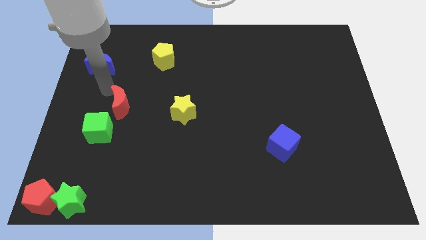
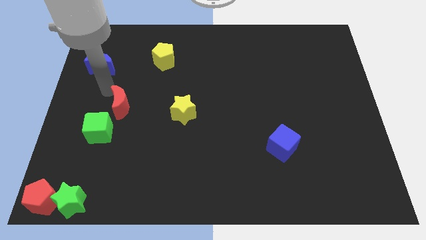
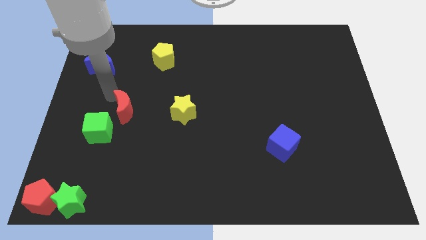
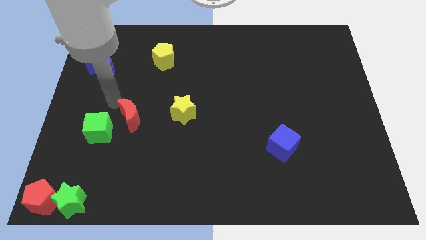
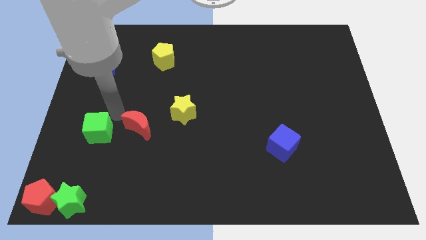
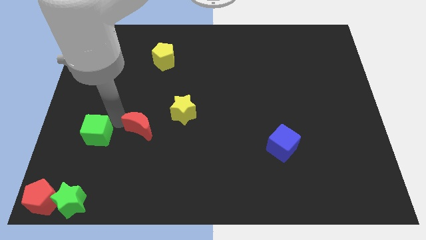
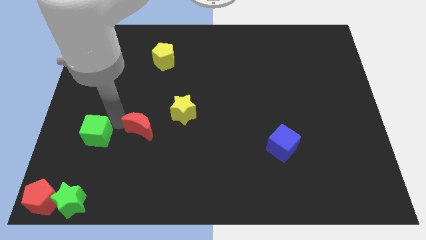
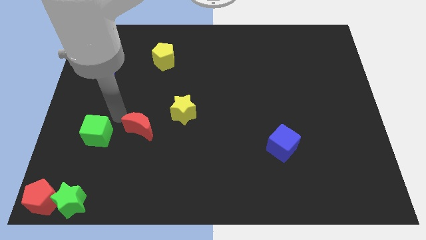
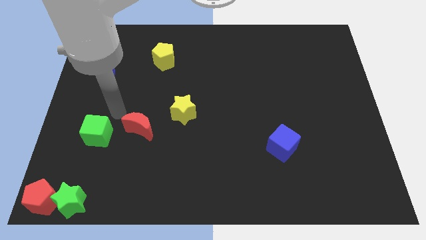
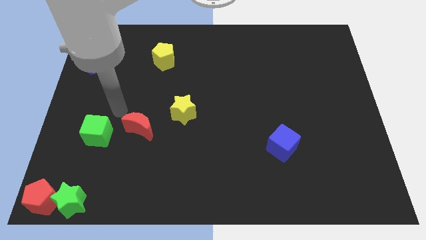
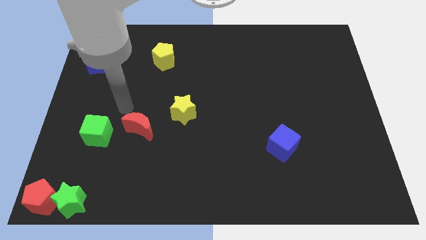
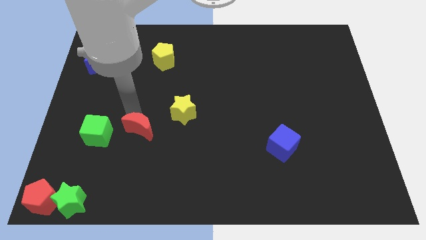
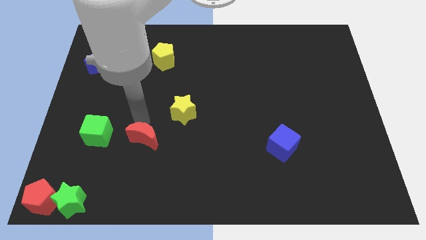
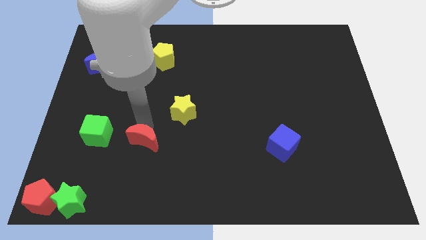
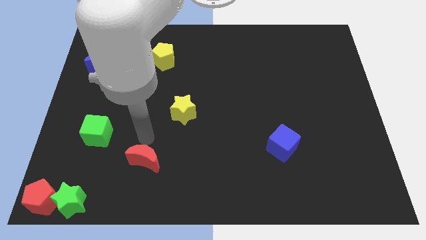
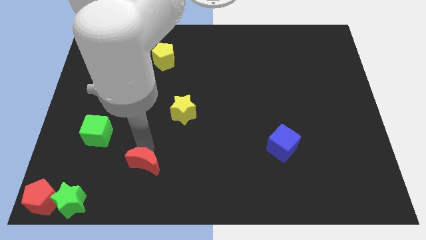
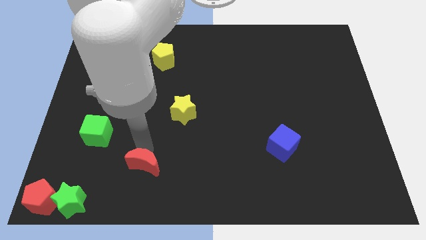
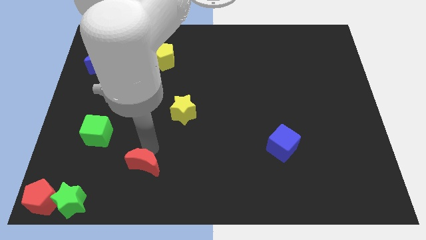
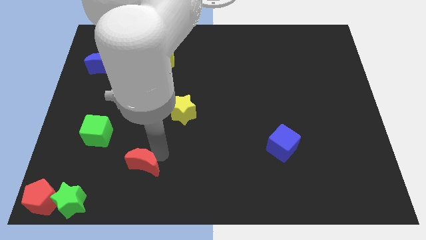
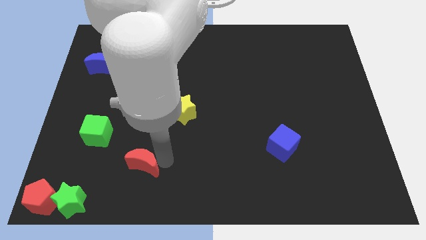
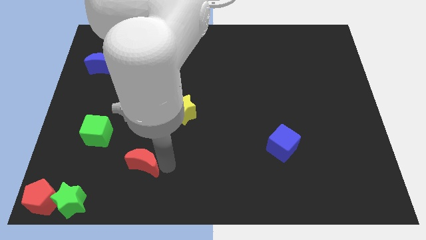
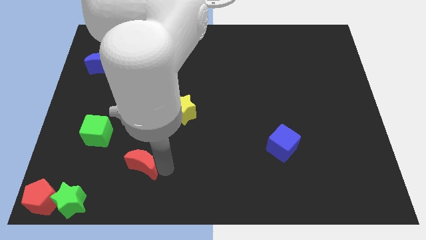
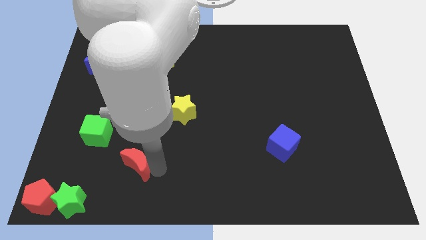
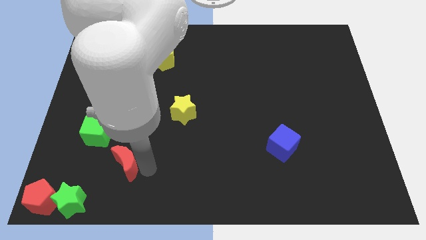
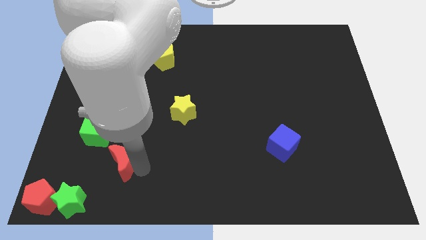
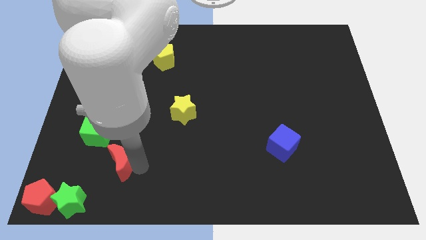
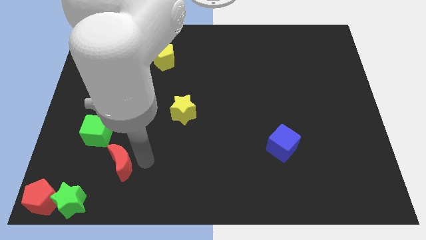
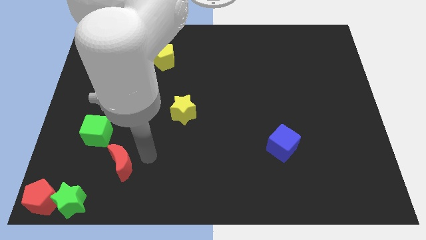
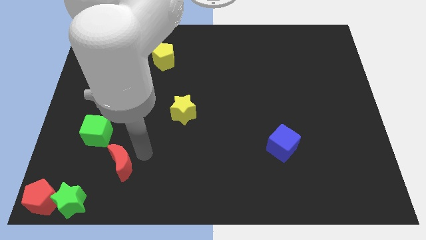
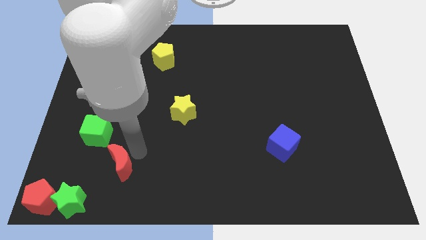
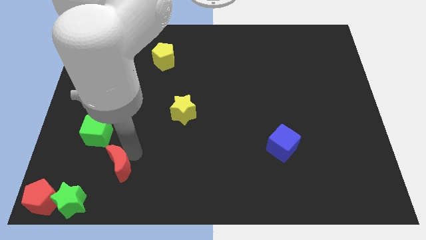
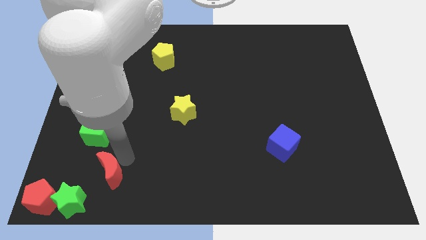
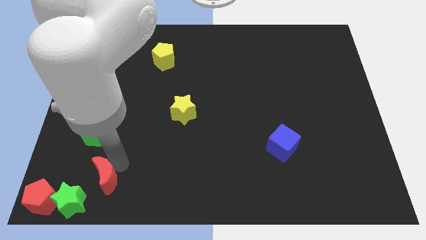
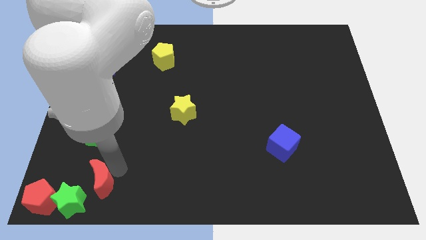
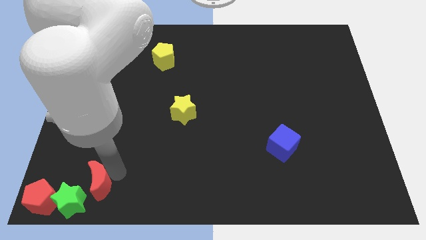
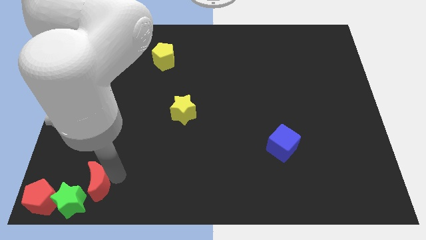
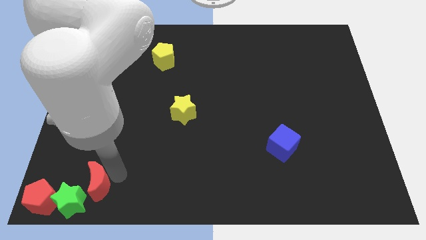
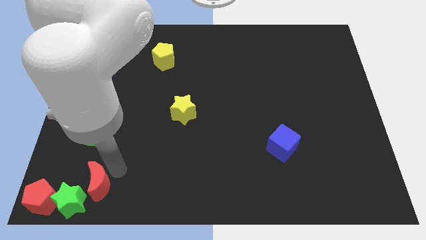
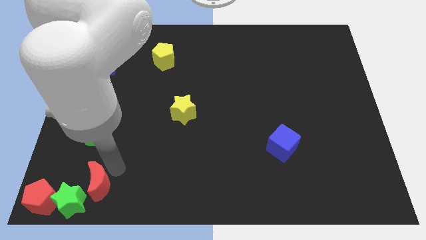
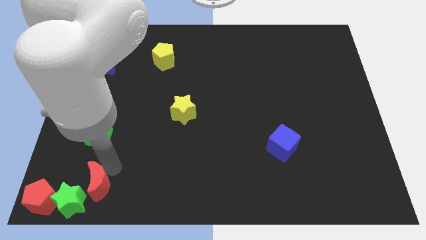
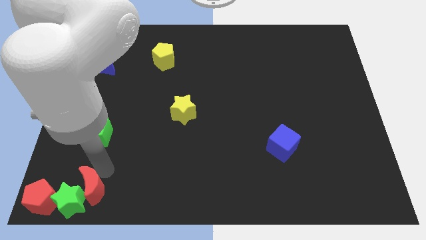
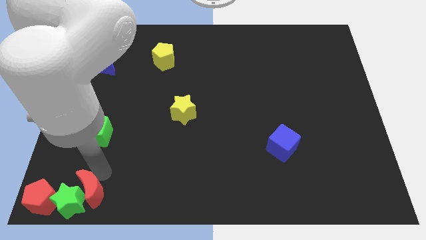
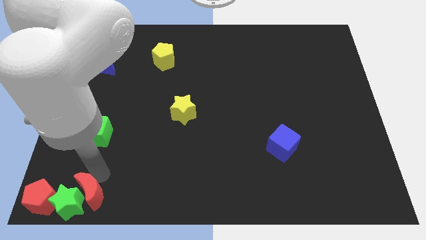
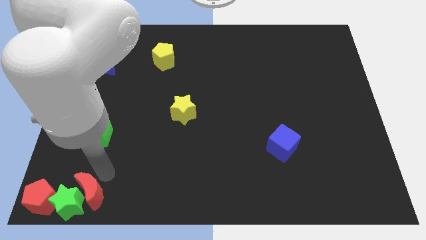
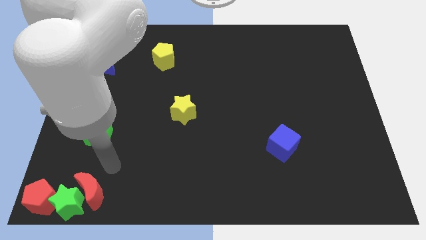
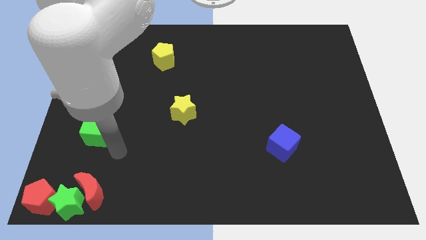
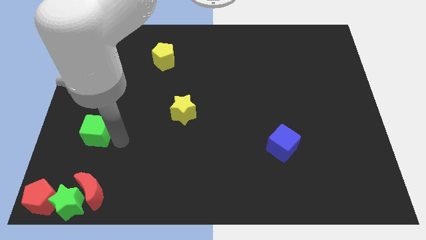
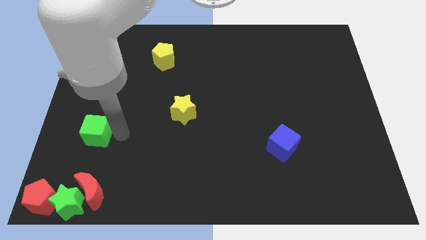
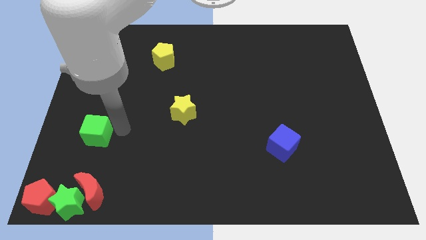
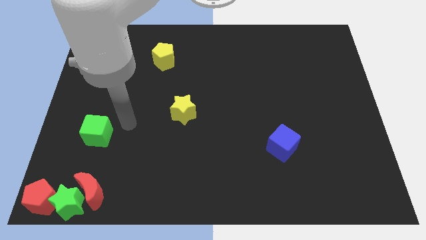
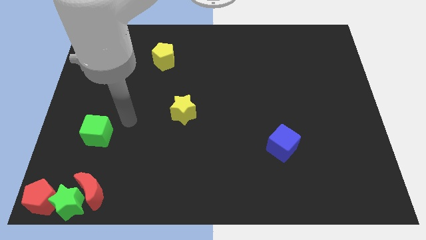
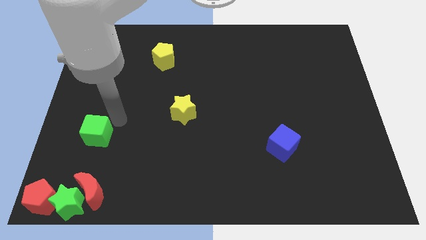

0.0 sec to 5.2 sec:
move the red moon to the top right side of the green star

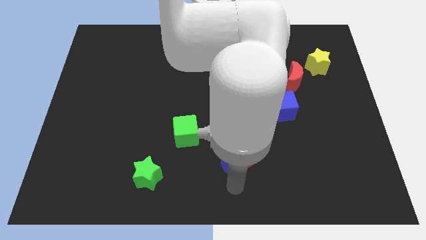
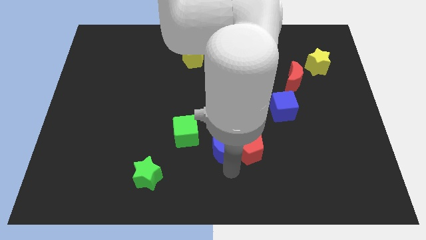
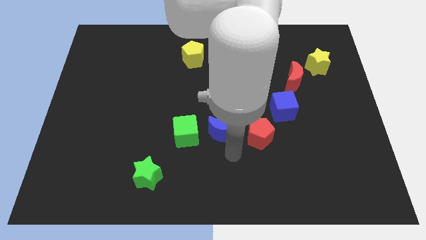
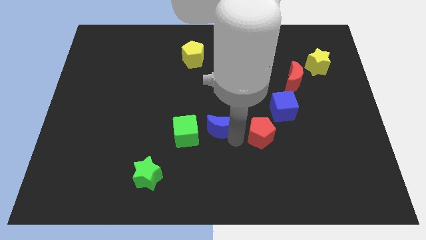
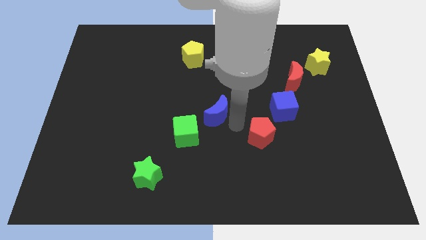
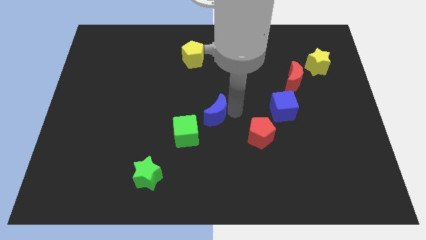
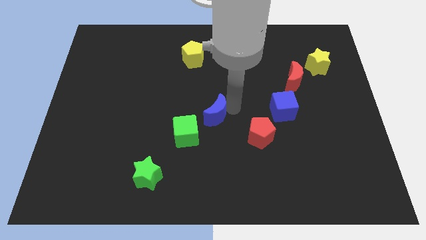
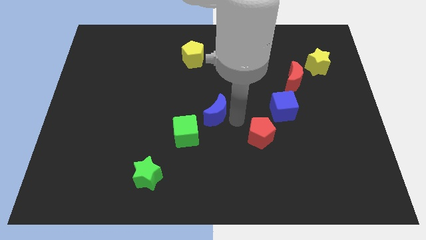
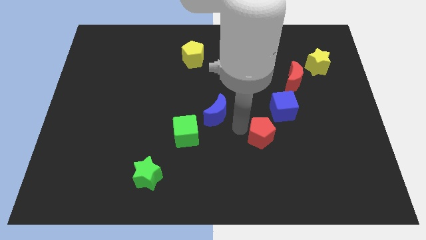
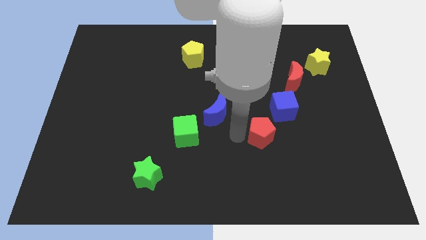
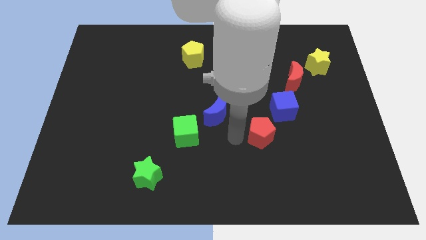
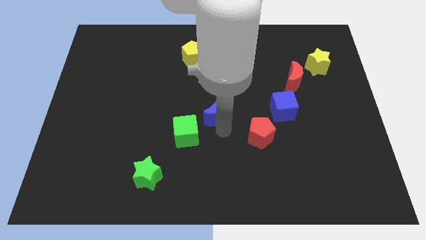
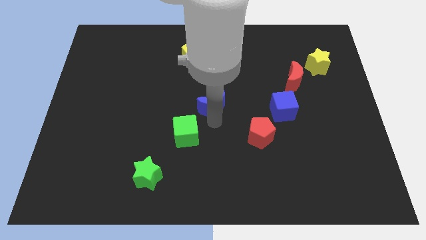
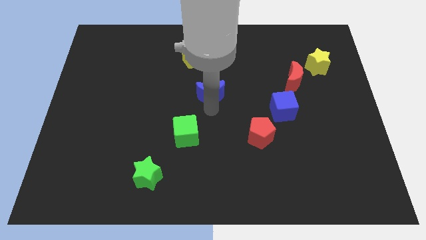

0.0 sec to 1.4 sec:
move the blue crescent to the top right of the green cube

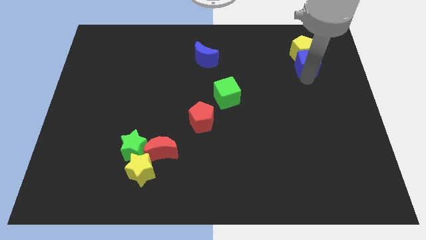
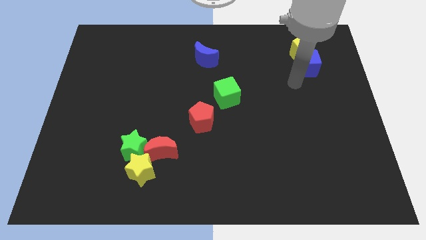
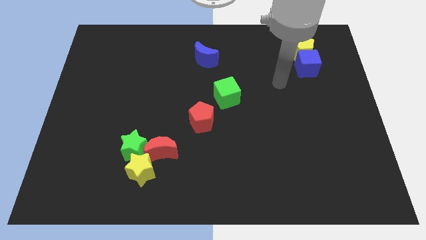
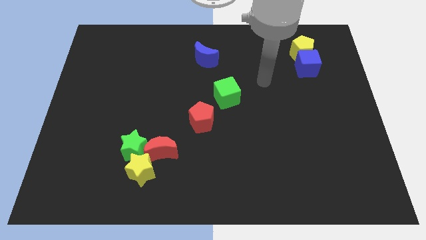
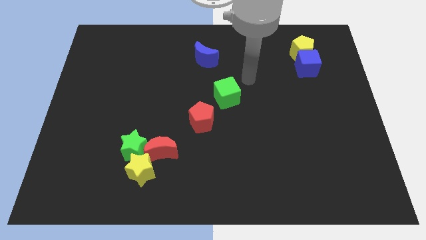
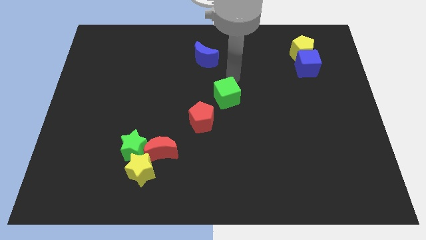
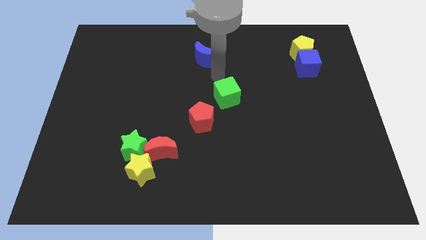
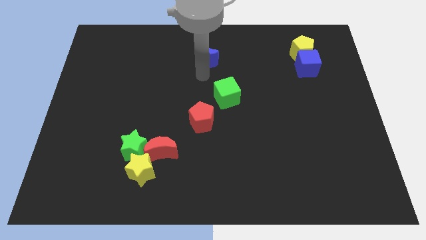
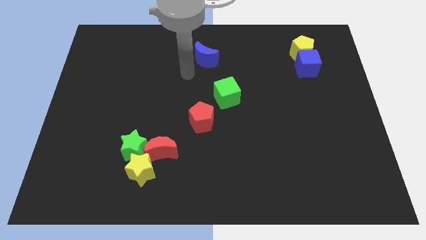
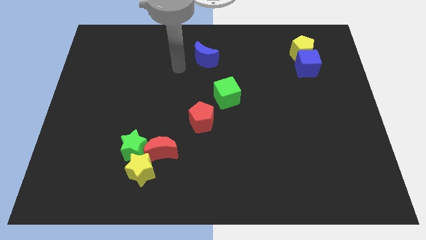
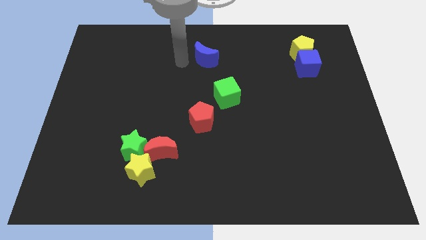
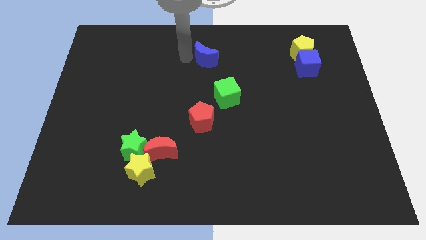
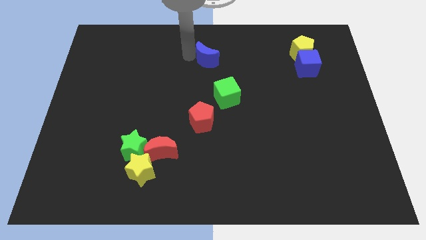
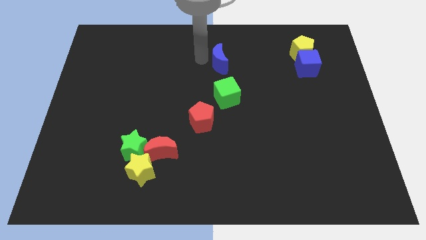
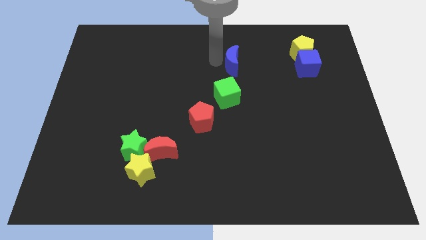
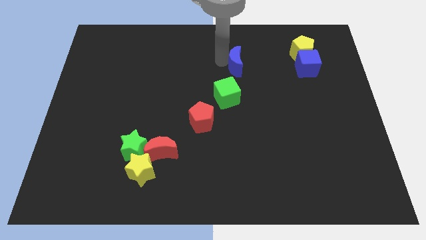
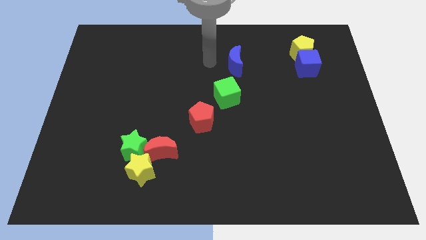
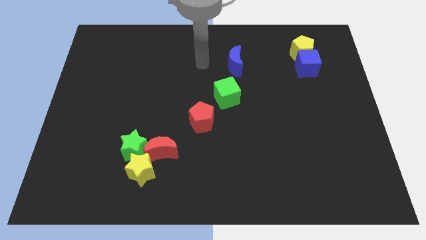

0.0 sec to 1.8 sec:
place the blue moon on top of green cube

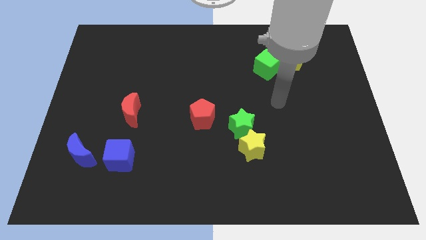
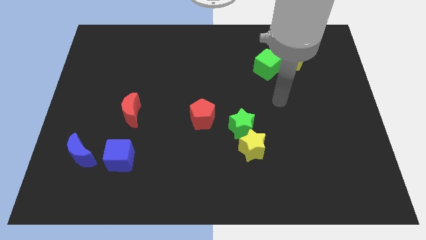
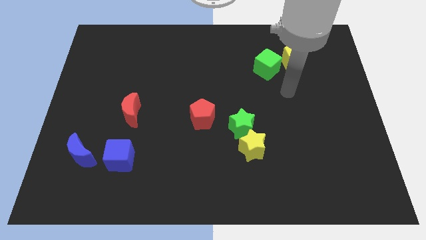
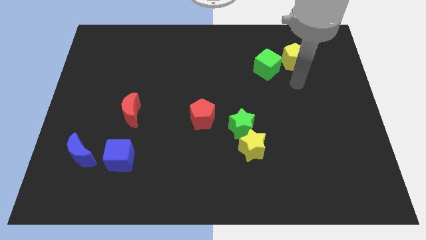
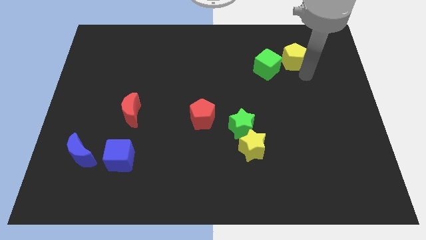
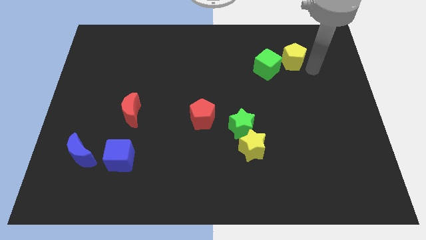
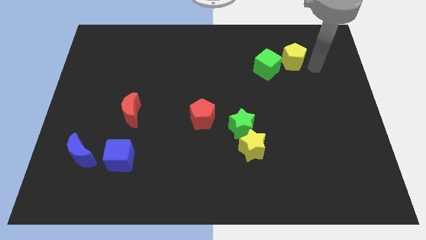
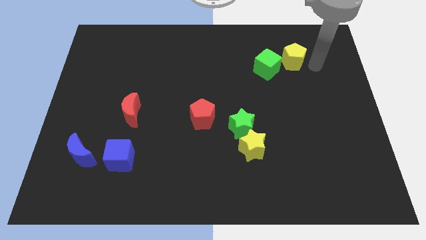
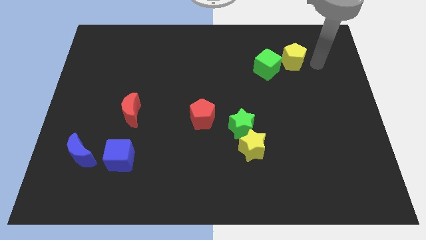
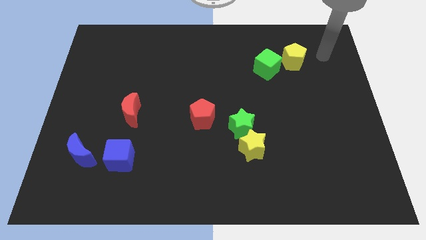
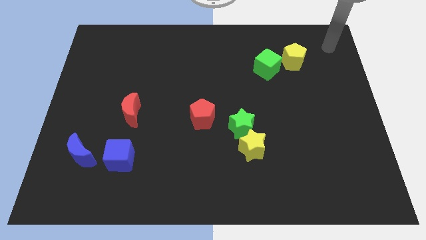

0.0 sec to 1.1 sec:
move your arm towards the top right corner
